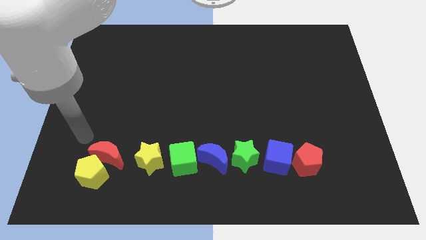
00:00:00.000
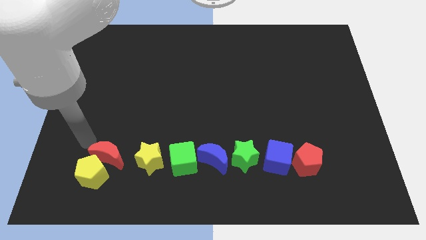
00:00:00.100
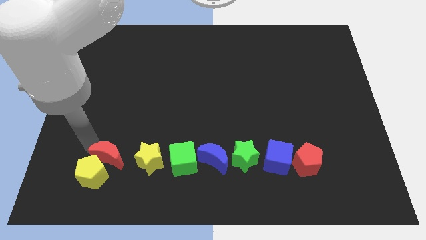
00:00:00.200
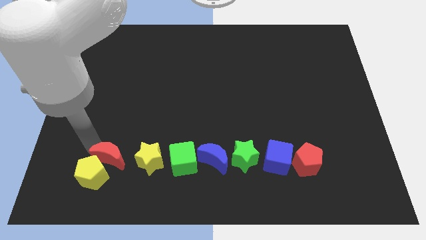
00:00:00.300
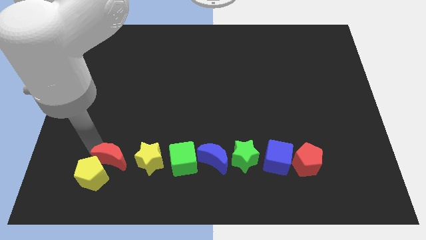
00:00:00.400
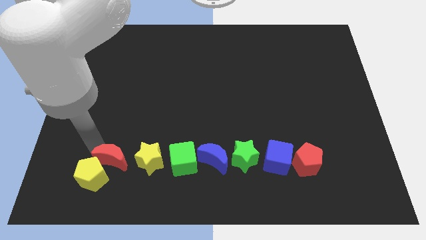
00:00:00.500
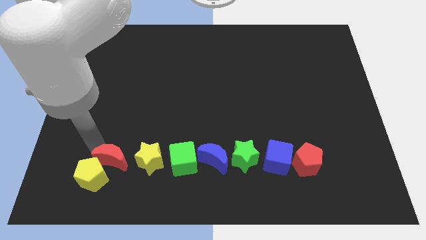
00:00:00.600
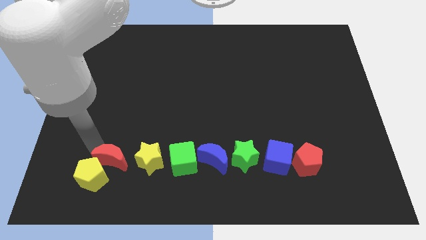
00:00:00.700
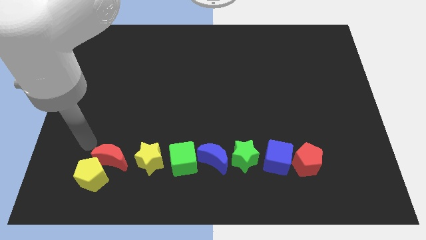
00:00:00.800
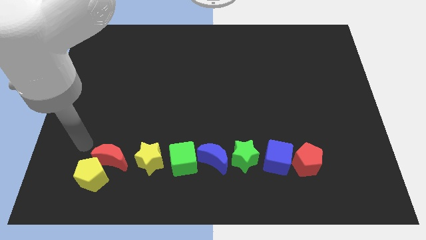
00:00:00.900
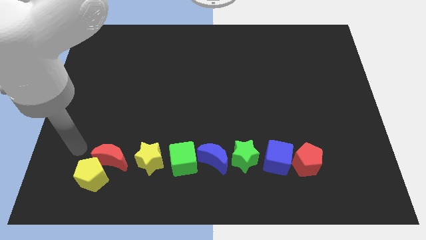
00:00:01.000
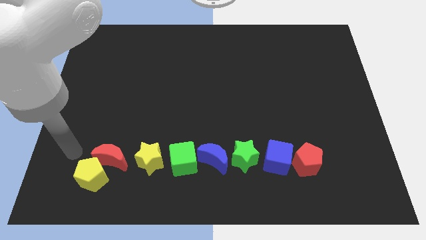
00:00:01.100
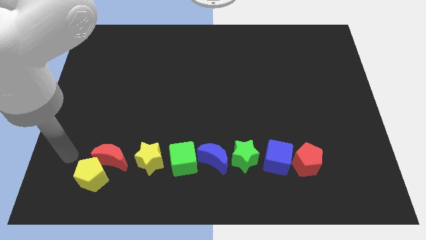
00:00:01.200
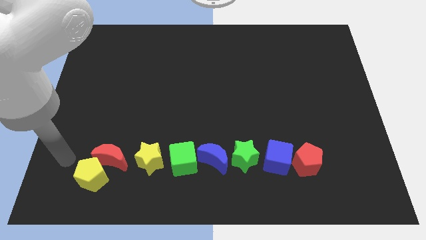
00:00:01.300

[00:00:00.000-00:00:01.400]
place the red crescent left to the yellow star

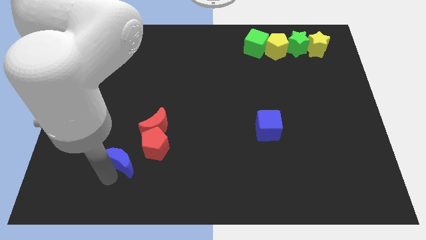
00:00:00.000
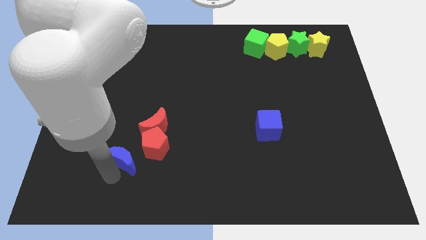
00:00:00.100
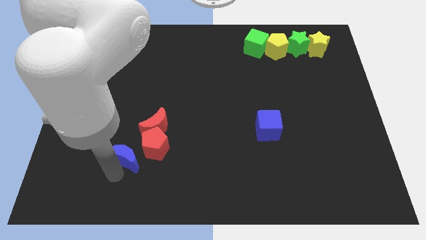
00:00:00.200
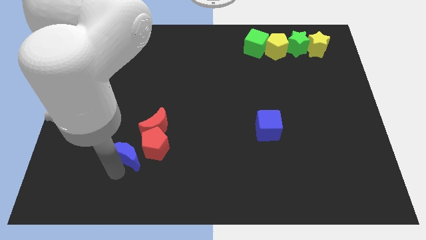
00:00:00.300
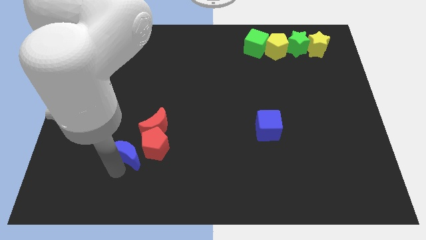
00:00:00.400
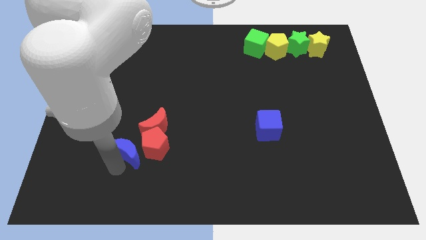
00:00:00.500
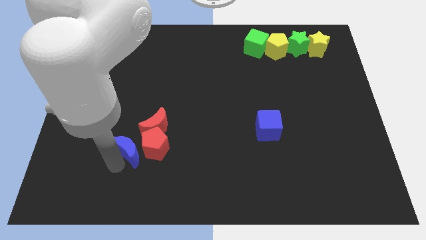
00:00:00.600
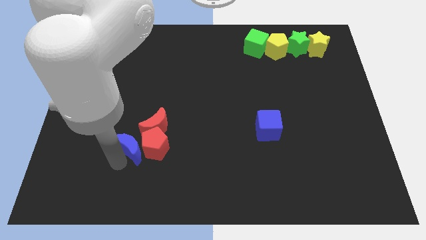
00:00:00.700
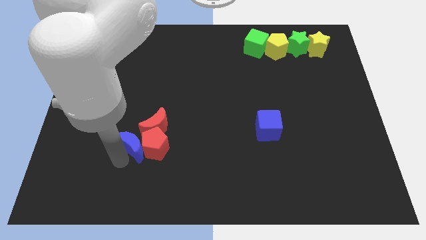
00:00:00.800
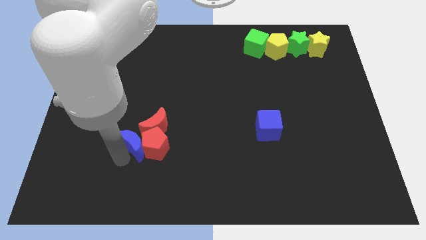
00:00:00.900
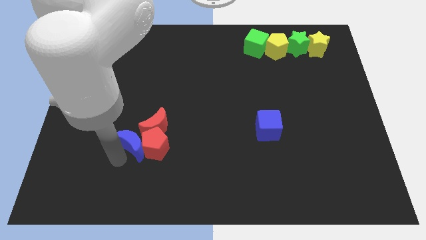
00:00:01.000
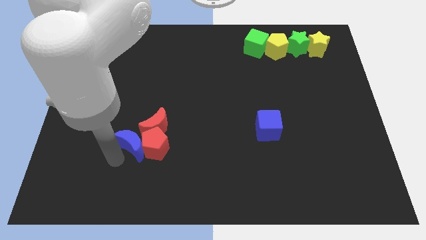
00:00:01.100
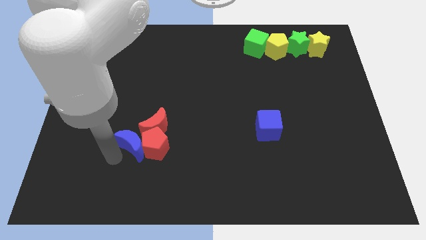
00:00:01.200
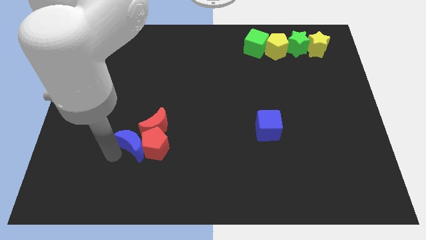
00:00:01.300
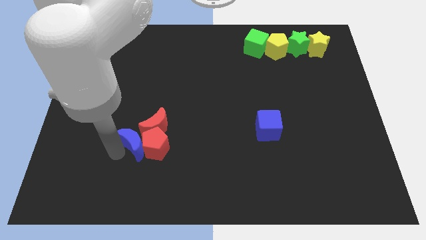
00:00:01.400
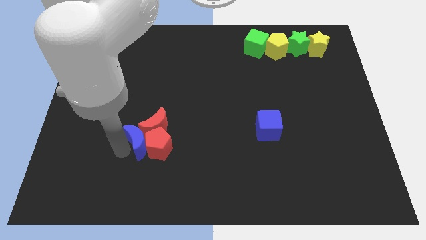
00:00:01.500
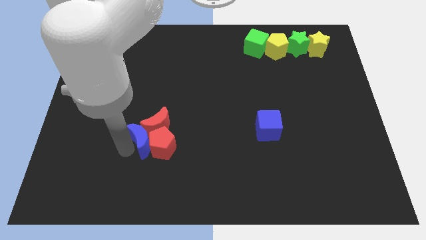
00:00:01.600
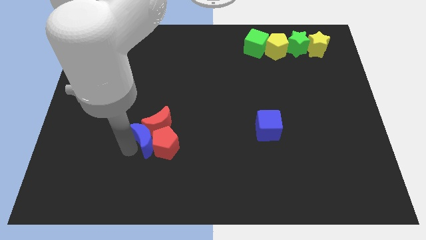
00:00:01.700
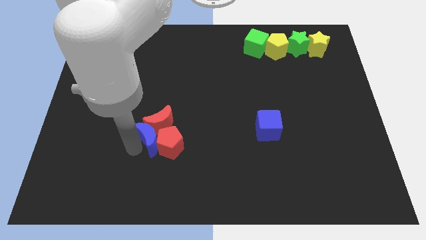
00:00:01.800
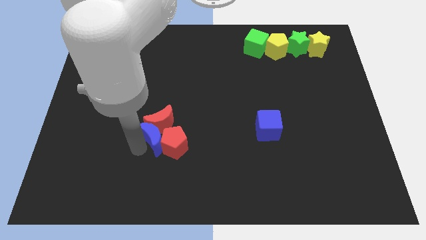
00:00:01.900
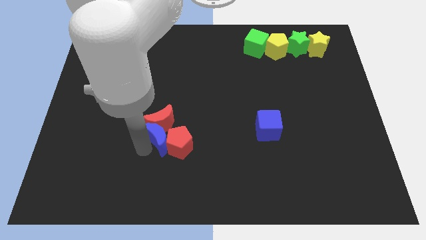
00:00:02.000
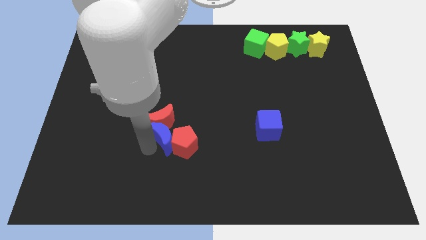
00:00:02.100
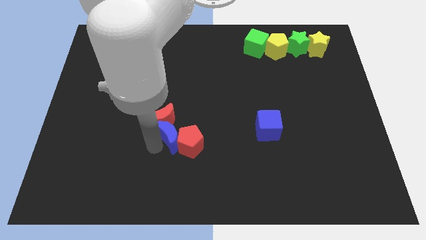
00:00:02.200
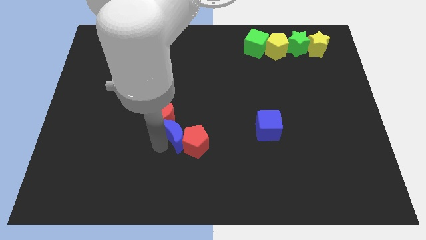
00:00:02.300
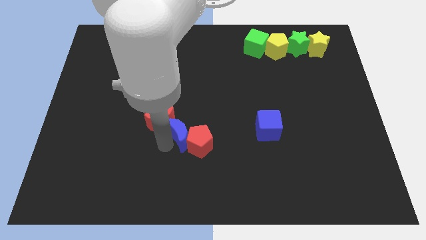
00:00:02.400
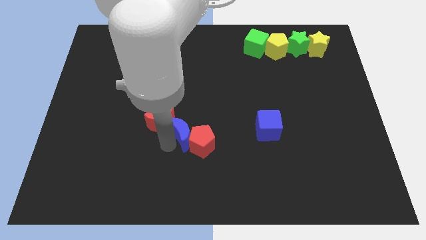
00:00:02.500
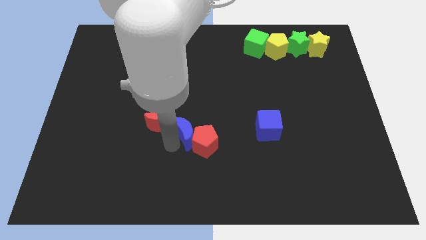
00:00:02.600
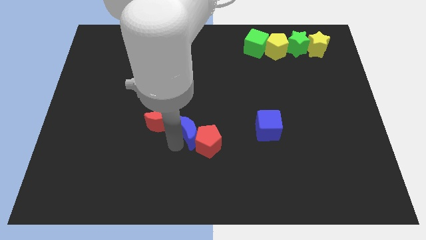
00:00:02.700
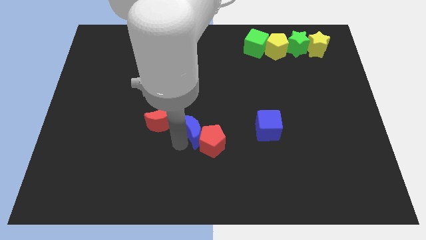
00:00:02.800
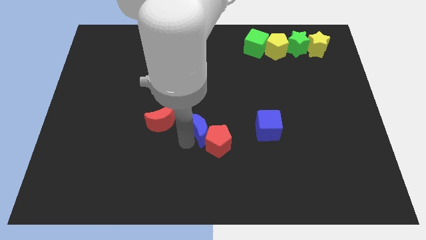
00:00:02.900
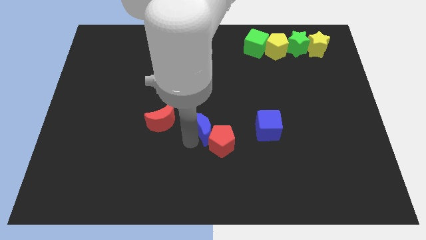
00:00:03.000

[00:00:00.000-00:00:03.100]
separate red blocks with blue crescent

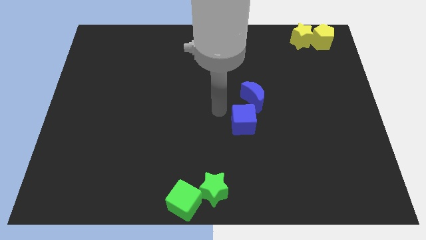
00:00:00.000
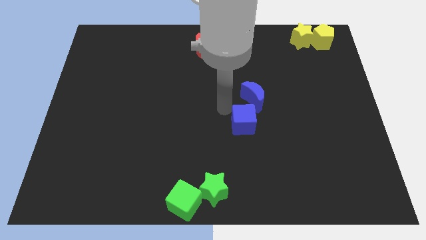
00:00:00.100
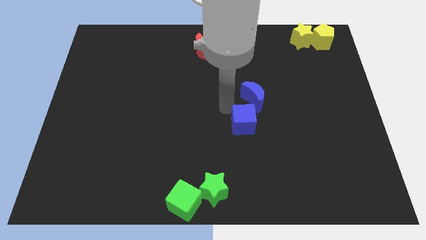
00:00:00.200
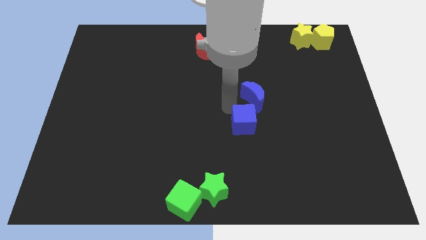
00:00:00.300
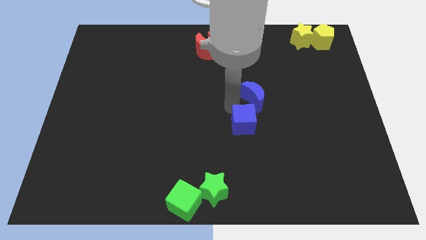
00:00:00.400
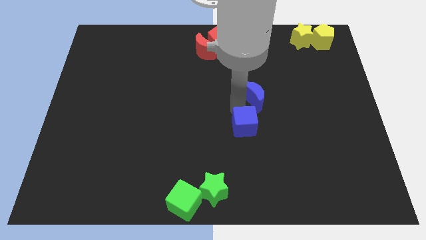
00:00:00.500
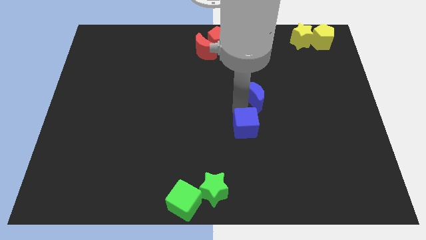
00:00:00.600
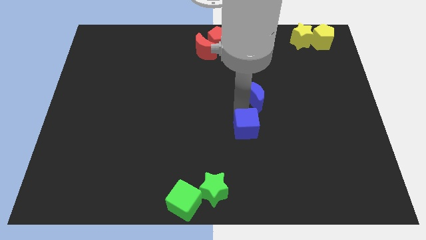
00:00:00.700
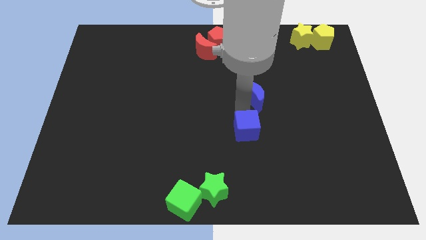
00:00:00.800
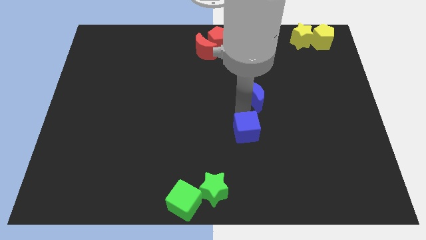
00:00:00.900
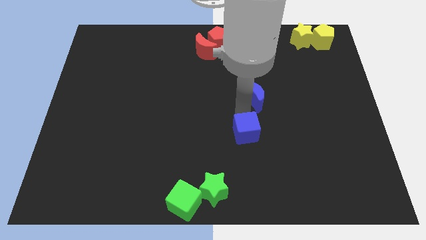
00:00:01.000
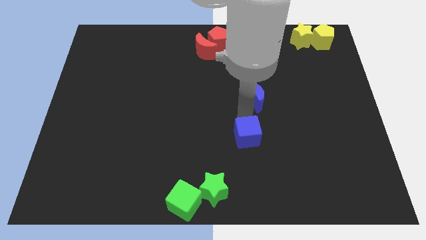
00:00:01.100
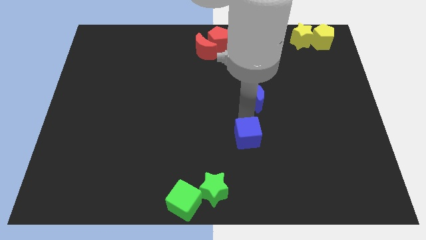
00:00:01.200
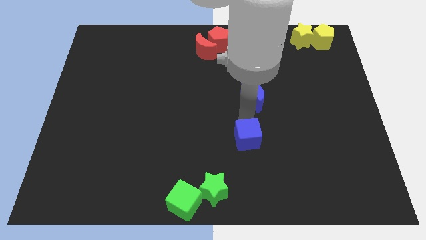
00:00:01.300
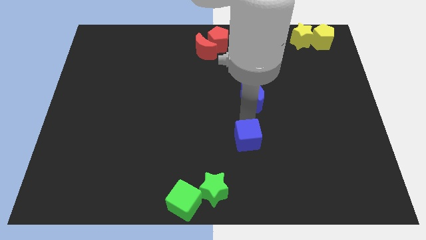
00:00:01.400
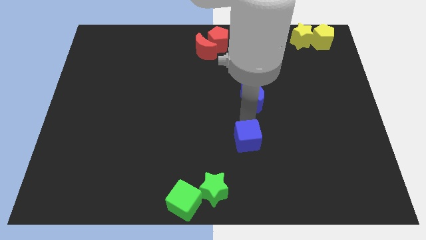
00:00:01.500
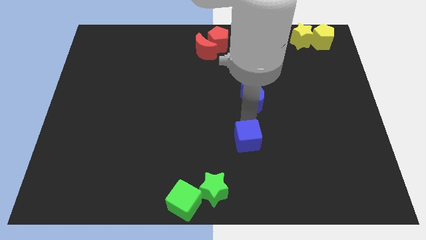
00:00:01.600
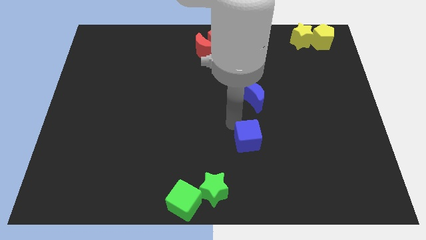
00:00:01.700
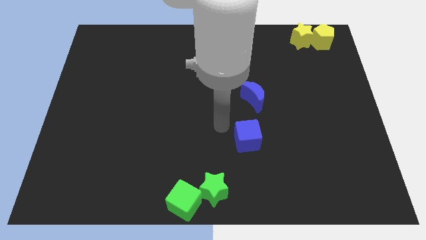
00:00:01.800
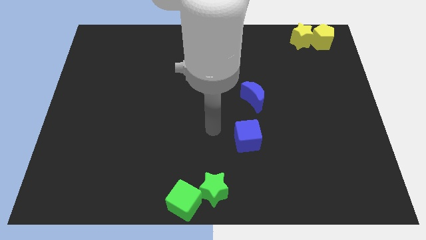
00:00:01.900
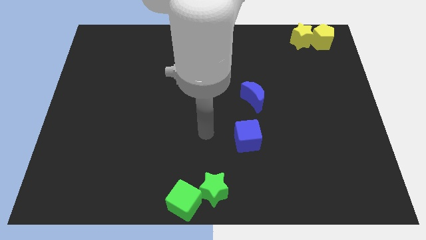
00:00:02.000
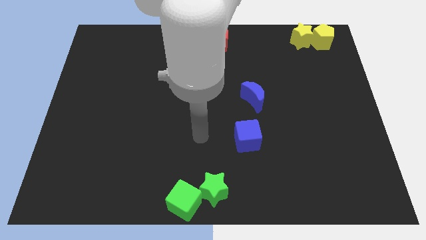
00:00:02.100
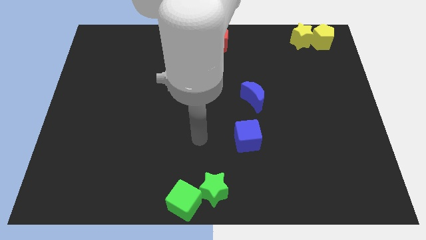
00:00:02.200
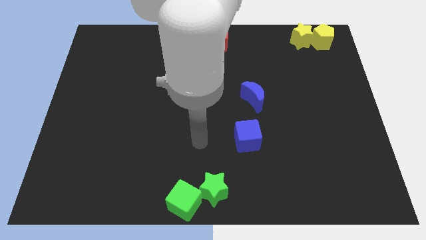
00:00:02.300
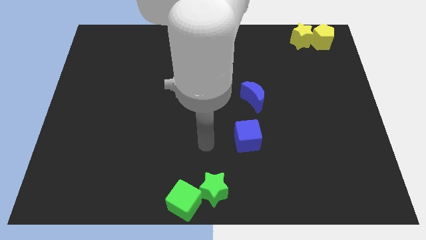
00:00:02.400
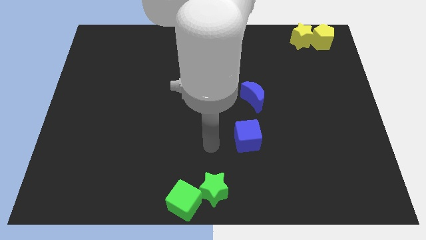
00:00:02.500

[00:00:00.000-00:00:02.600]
separate the blue blocks

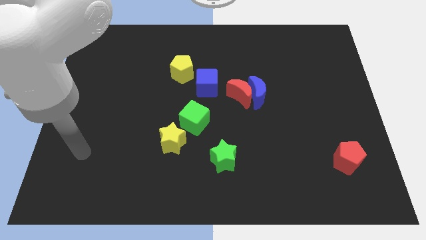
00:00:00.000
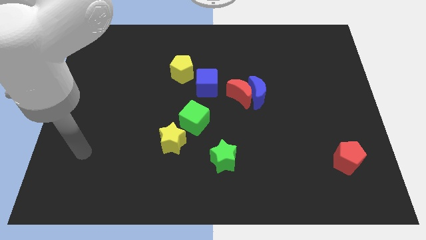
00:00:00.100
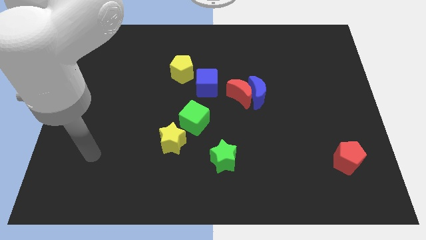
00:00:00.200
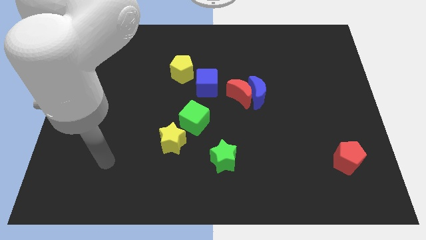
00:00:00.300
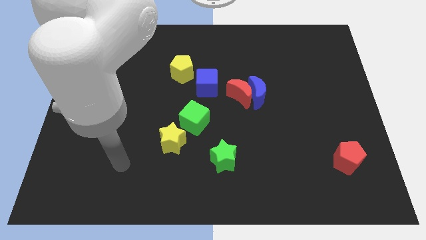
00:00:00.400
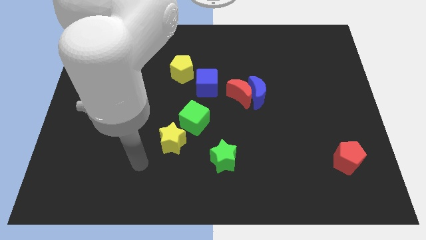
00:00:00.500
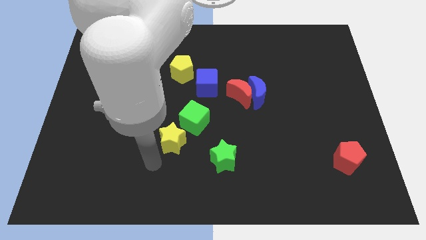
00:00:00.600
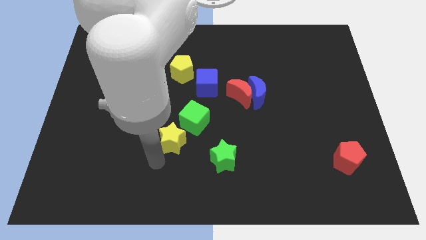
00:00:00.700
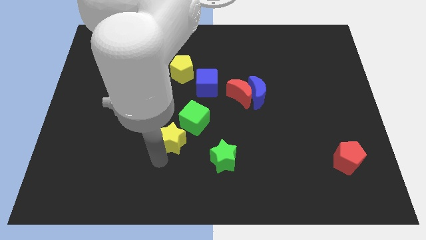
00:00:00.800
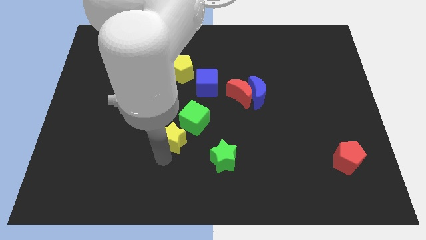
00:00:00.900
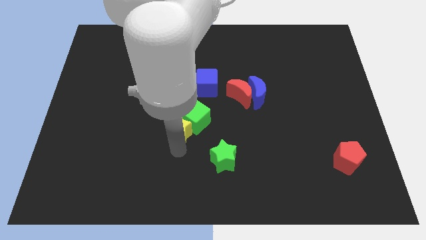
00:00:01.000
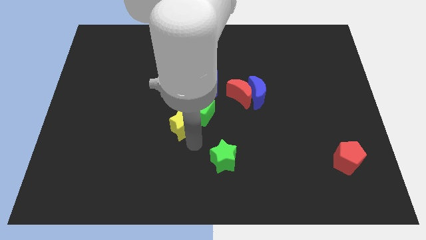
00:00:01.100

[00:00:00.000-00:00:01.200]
move the yellow star to the left of the green cube

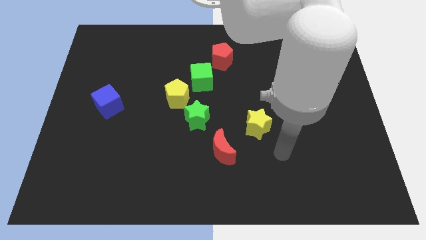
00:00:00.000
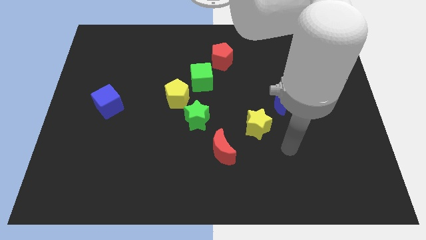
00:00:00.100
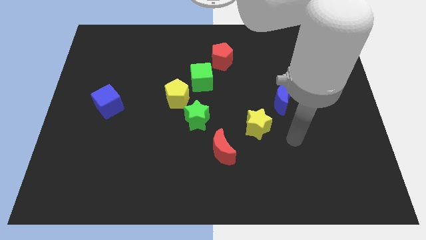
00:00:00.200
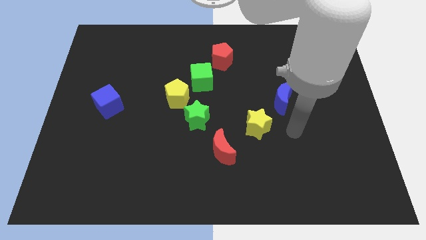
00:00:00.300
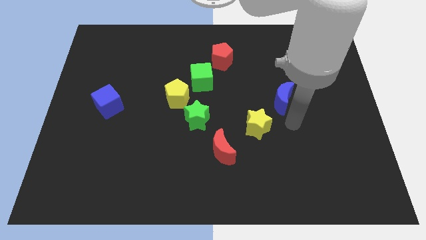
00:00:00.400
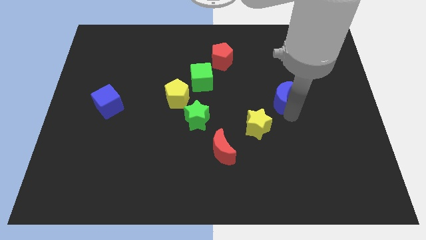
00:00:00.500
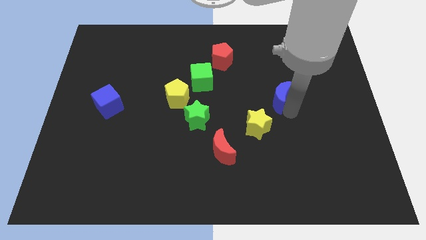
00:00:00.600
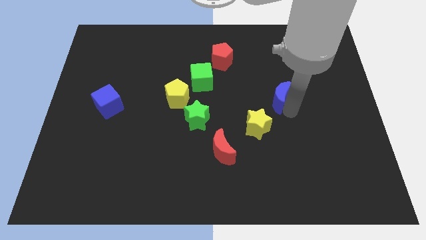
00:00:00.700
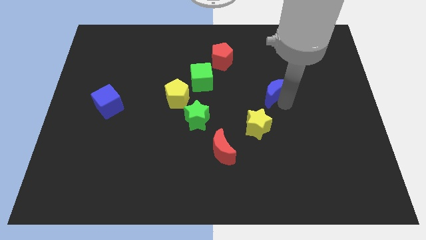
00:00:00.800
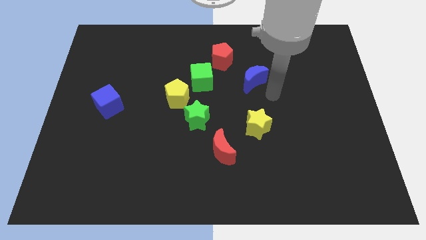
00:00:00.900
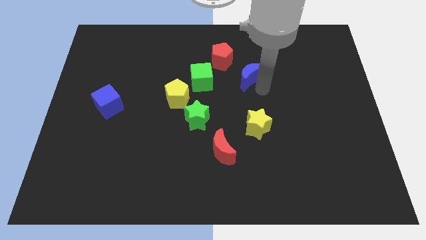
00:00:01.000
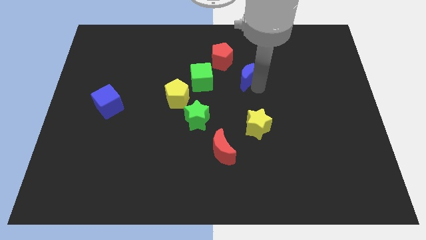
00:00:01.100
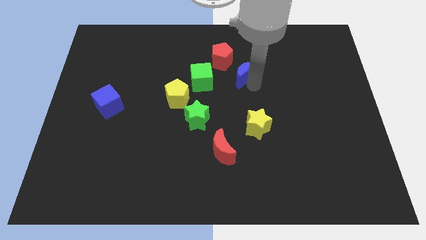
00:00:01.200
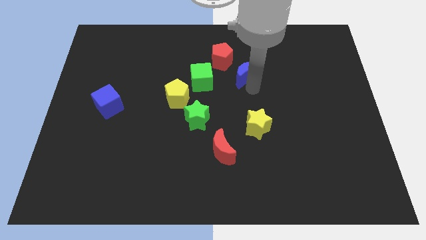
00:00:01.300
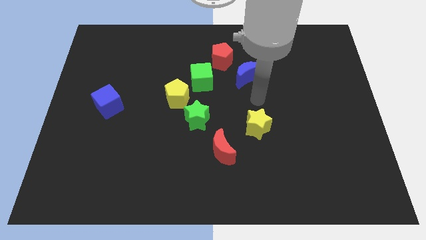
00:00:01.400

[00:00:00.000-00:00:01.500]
move the blue moon above the yellow star
